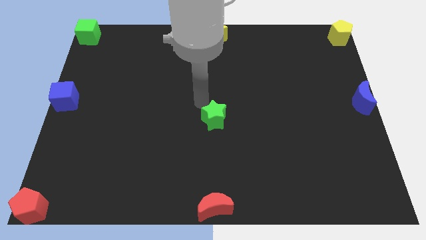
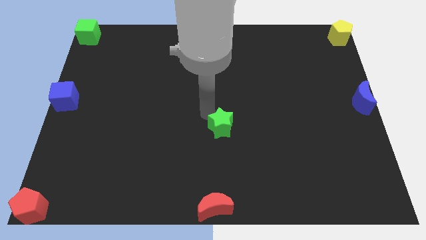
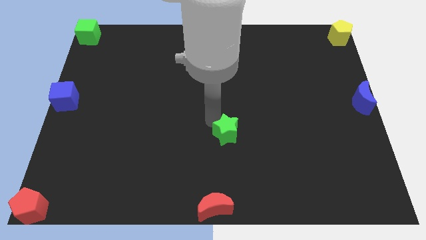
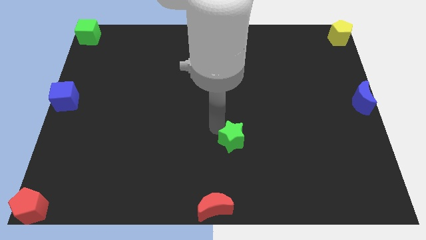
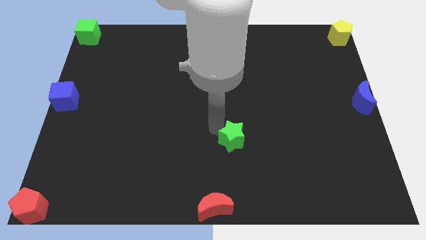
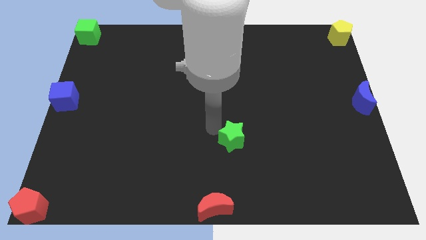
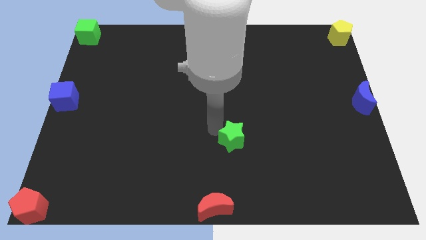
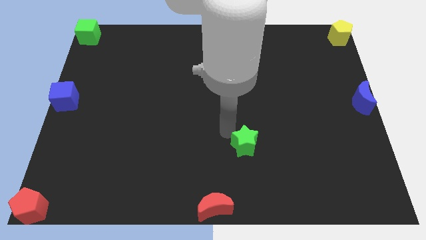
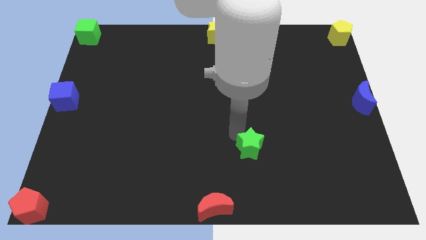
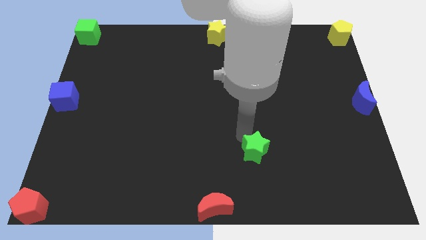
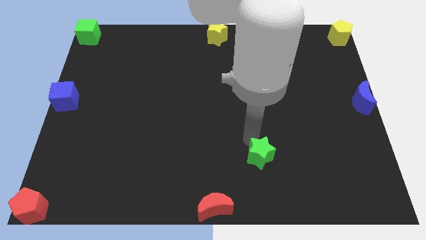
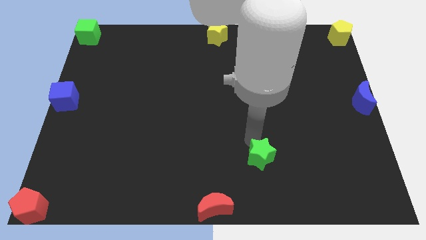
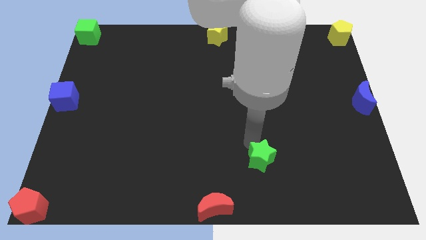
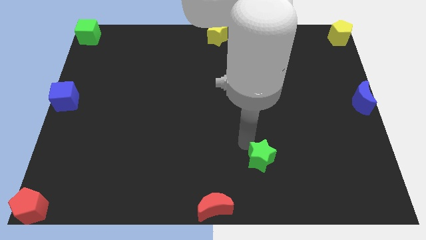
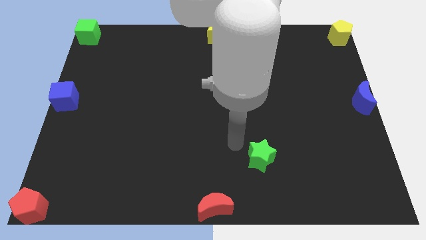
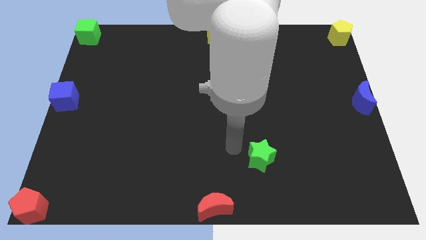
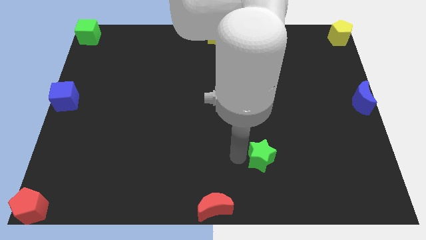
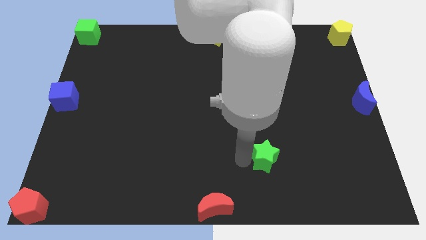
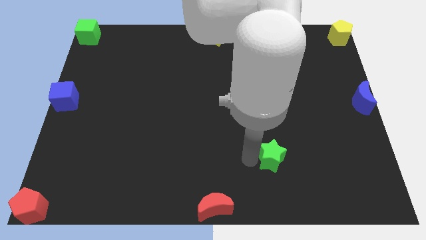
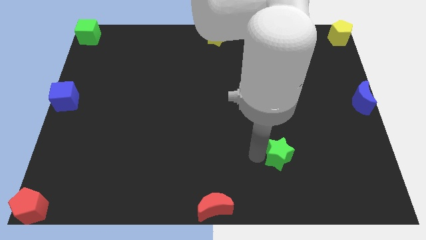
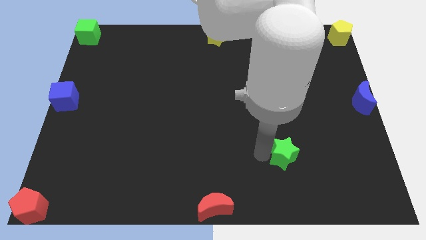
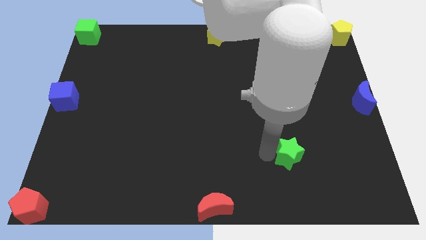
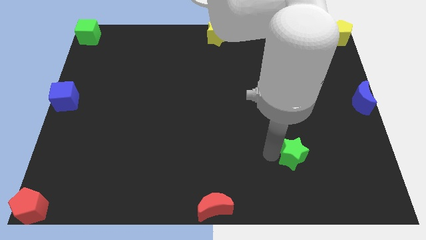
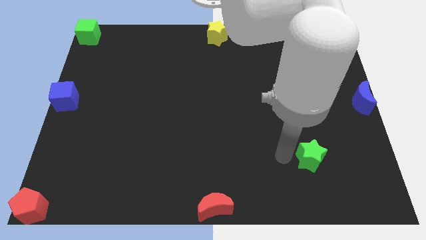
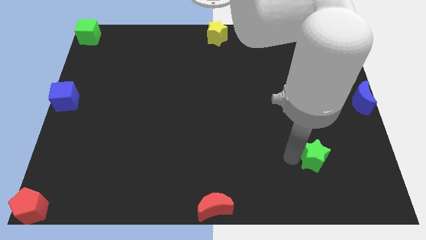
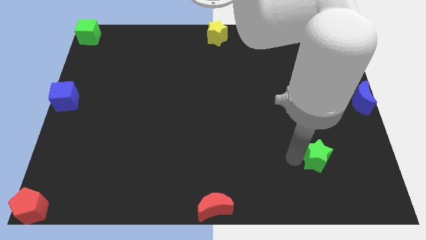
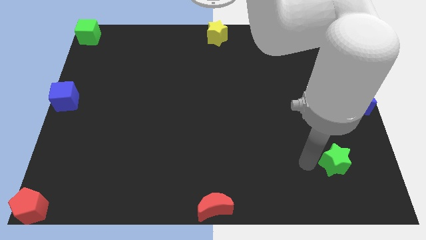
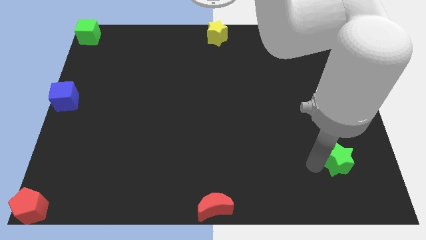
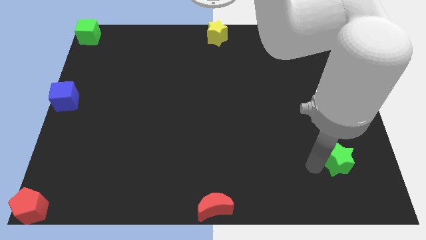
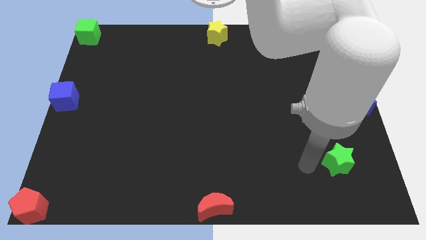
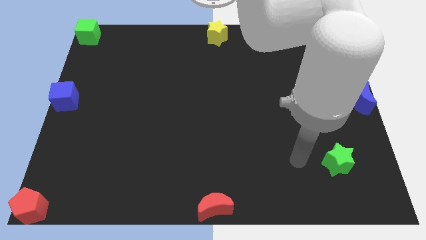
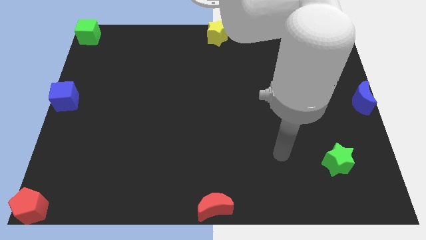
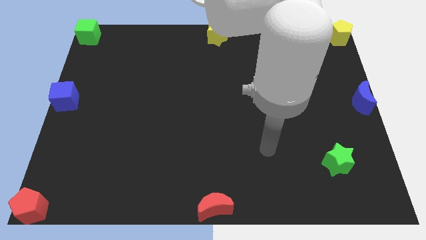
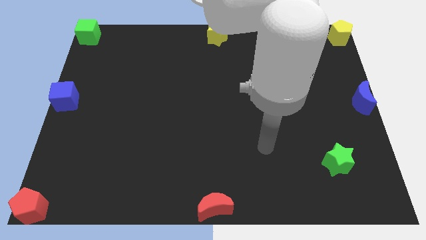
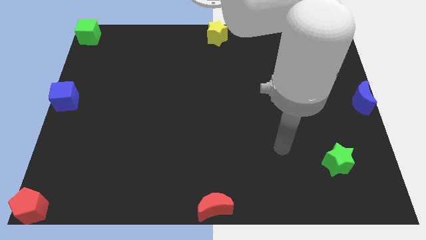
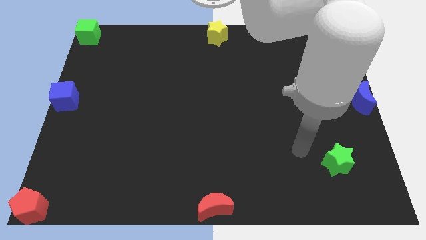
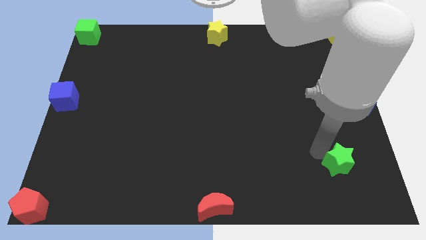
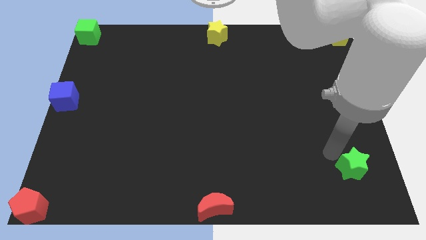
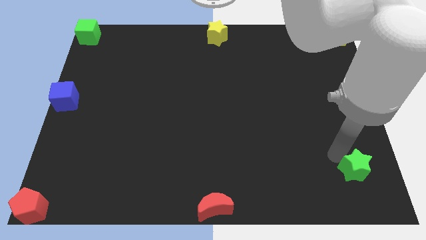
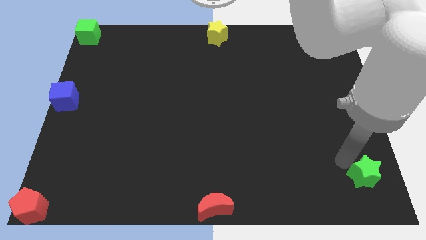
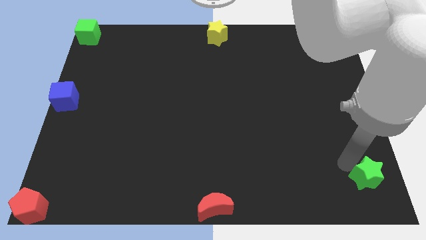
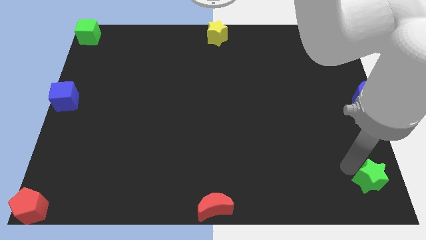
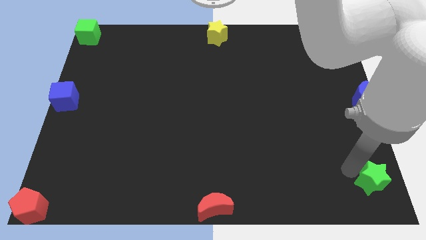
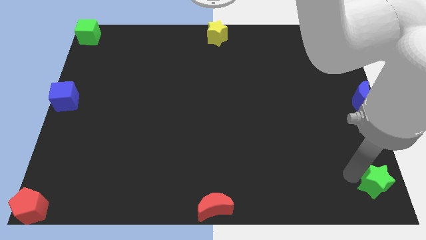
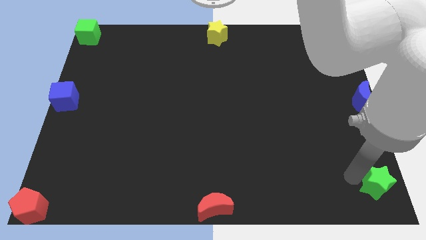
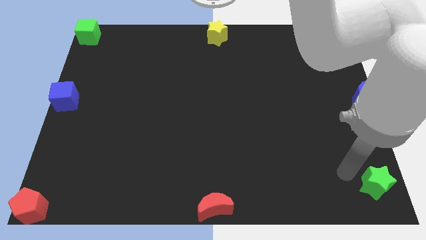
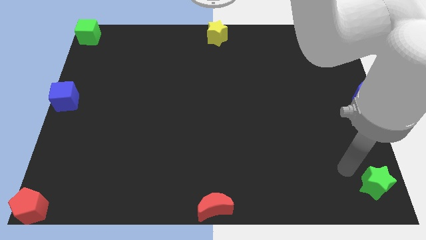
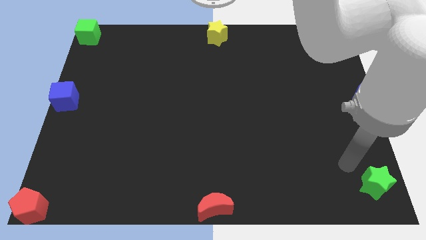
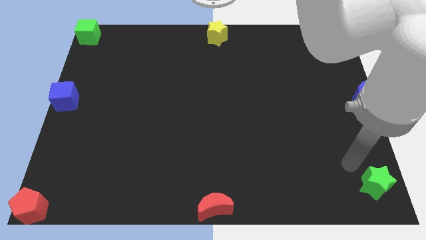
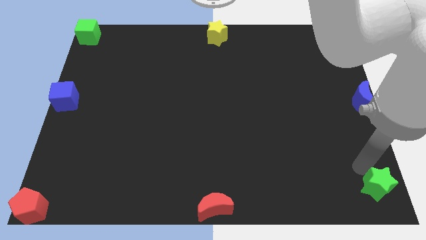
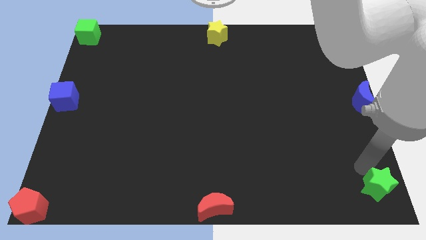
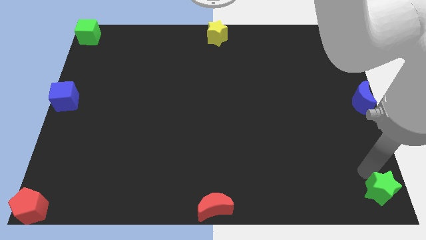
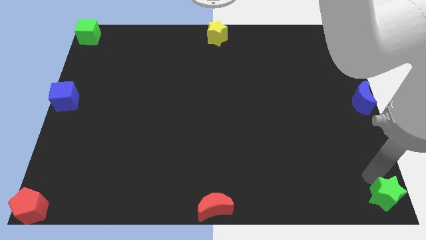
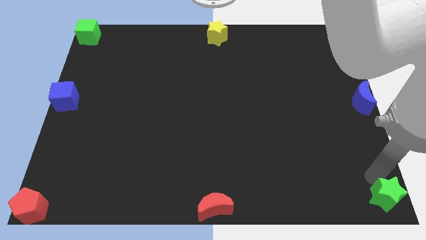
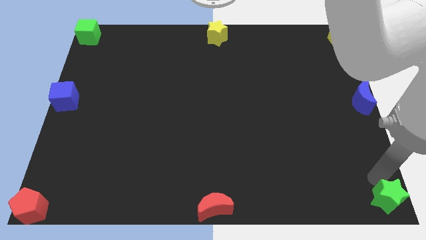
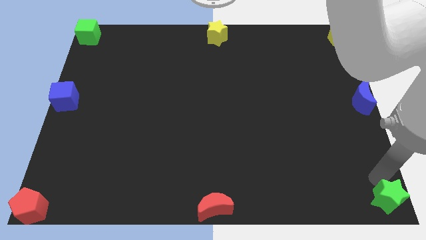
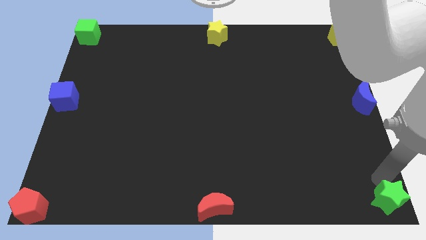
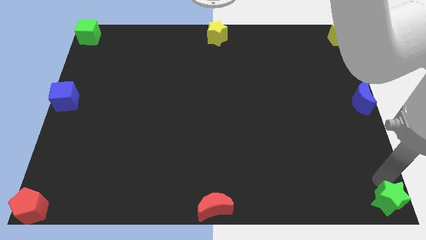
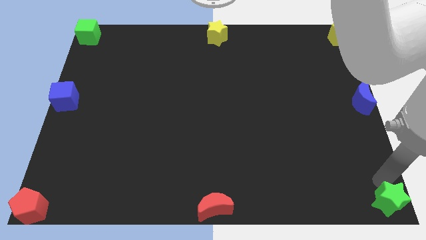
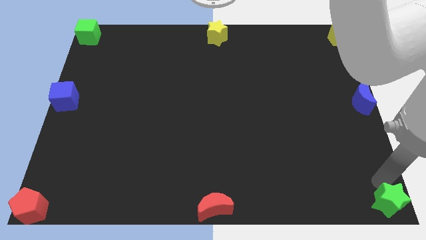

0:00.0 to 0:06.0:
move the green star to the bottom right corner

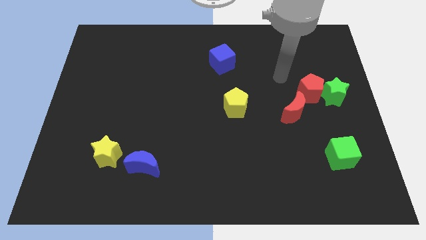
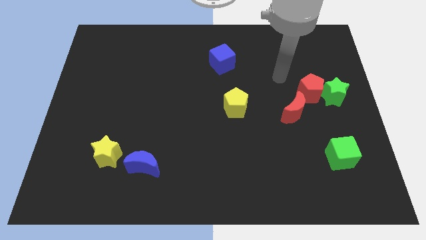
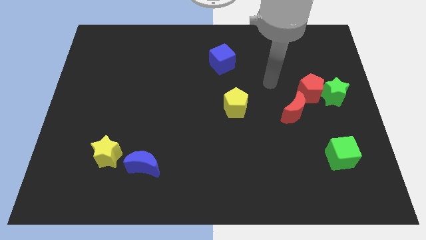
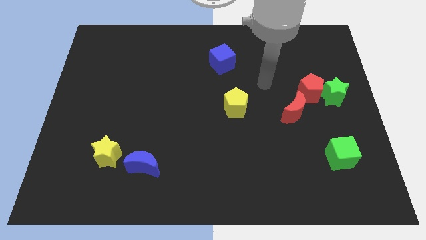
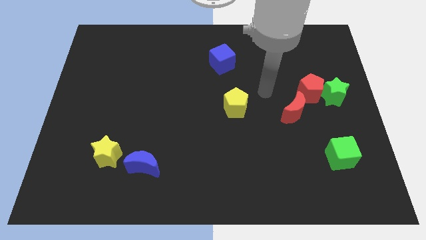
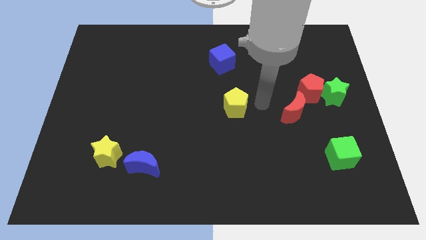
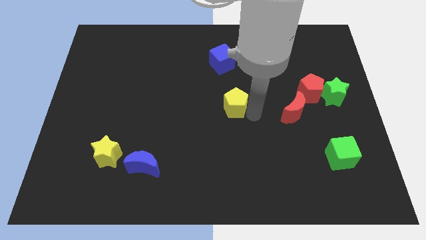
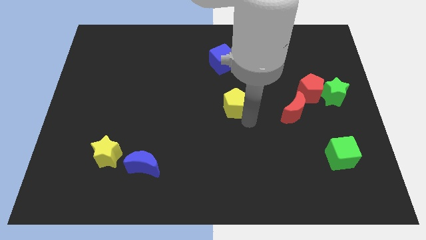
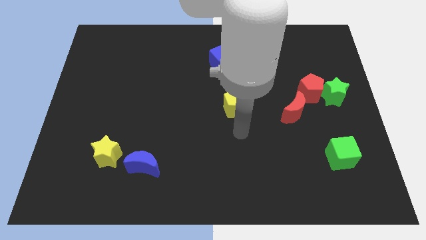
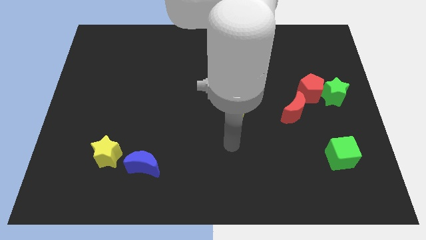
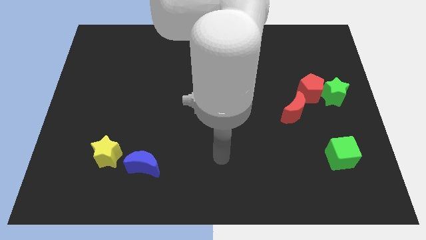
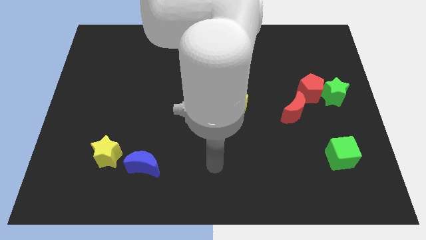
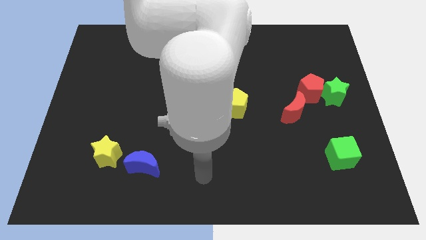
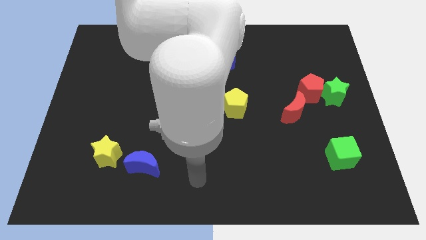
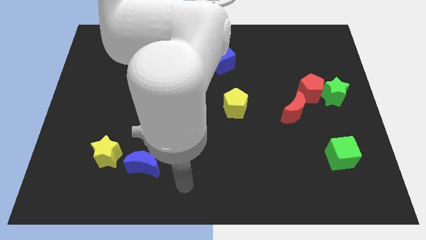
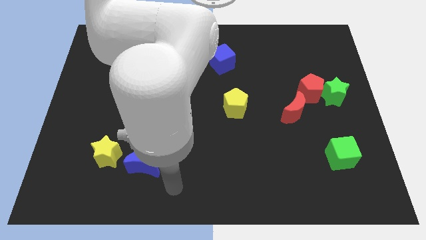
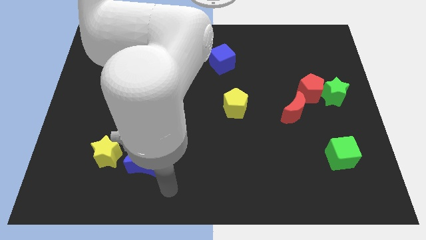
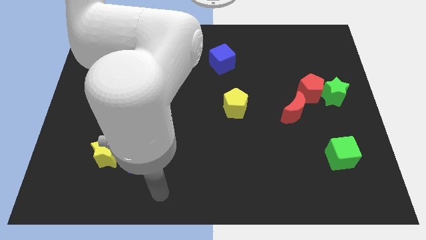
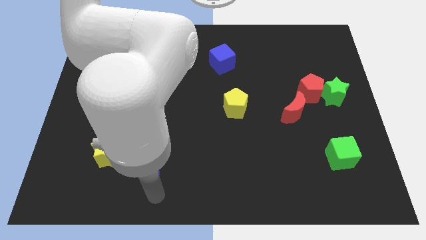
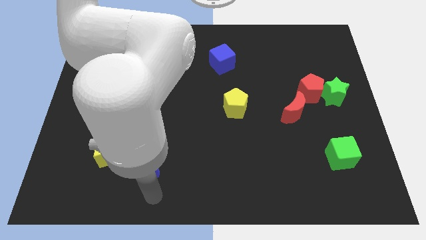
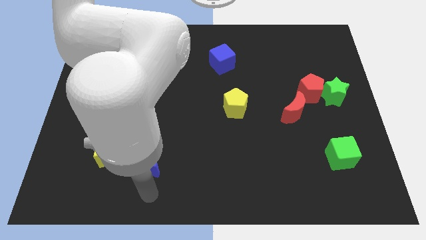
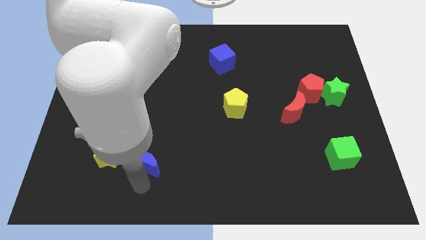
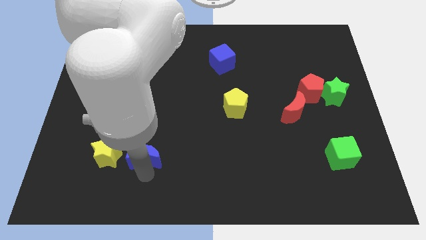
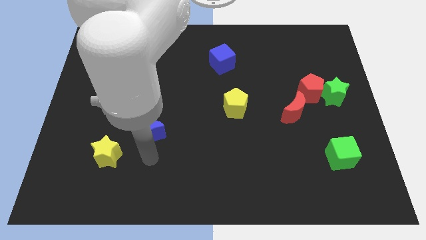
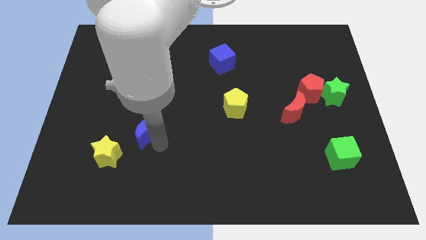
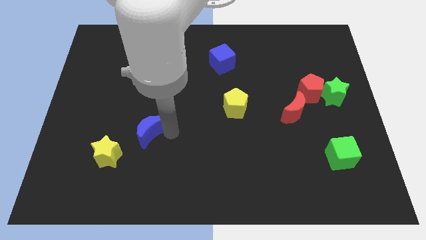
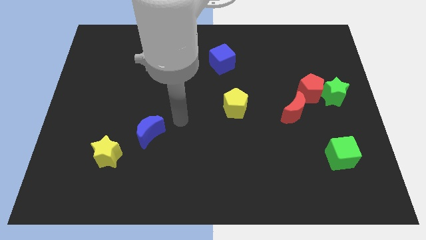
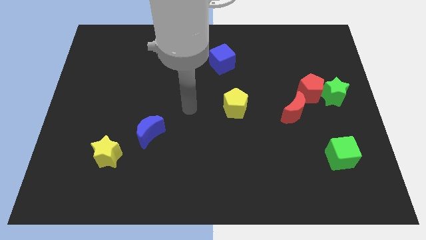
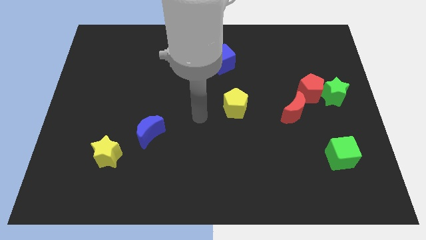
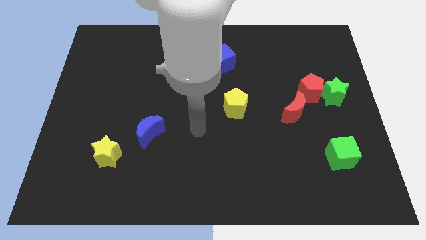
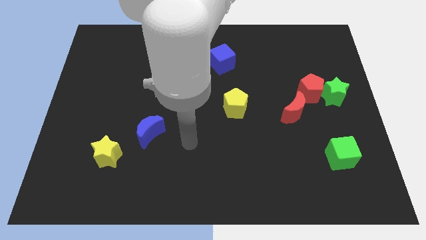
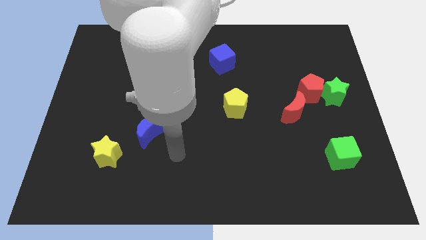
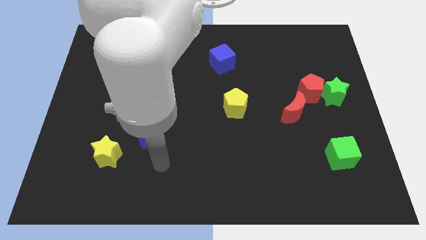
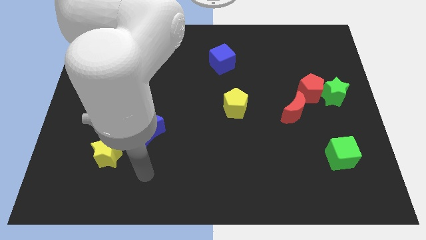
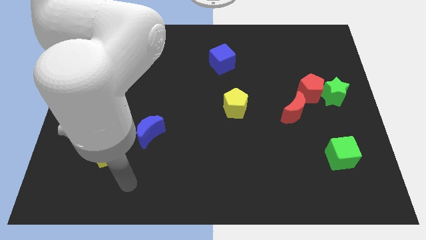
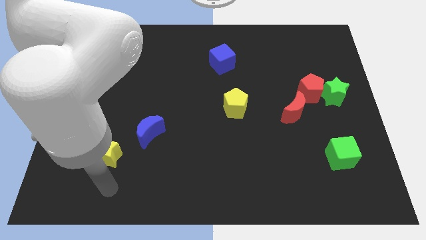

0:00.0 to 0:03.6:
slightly push the blue crescent towards the top of the board
